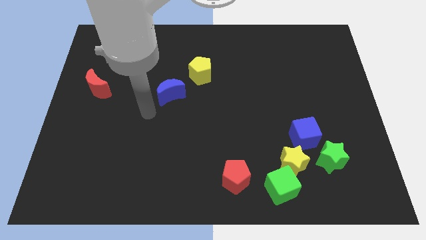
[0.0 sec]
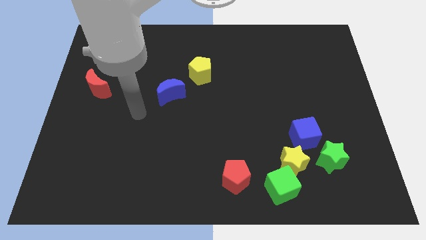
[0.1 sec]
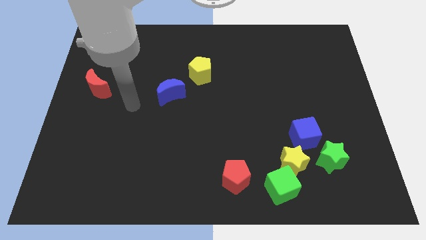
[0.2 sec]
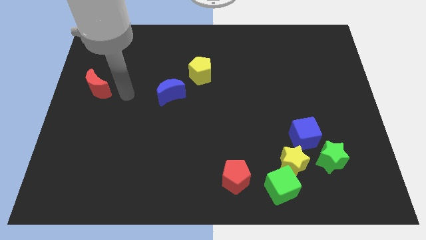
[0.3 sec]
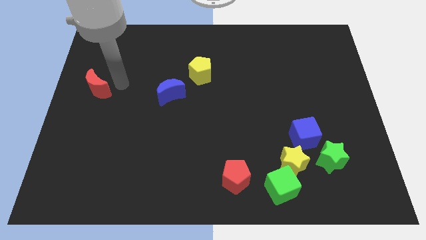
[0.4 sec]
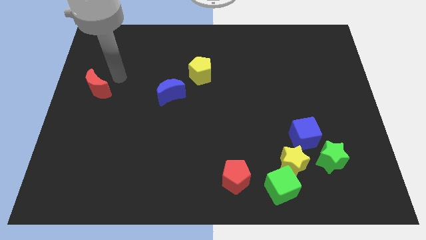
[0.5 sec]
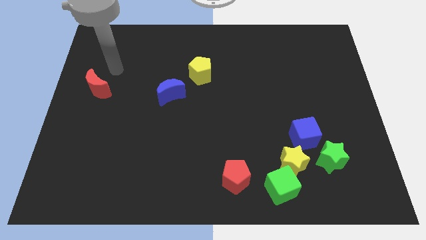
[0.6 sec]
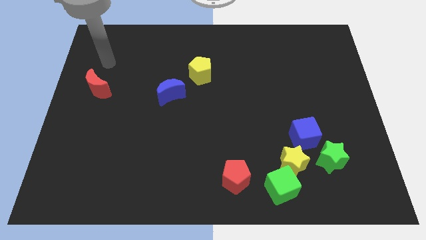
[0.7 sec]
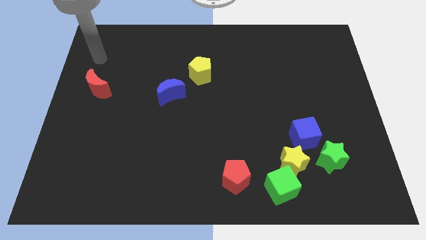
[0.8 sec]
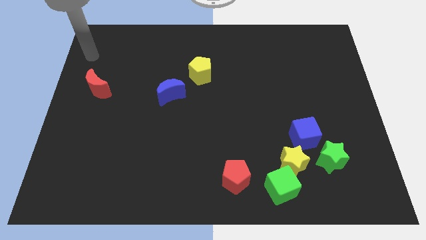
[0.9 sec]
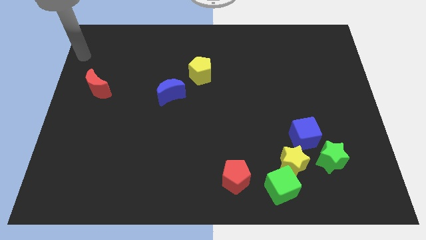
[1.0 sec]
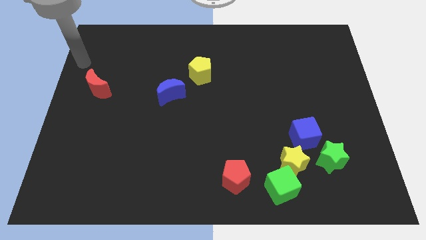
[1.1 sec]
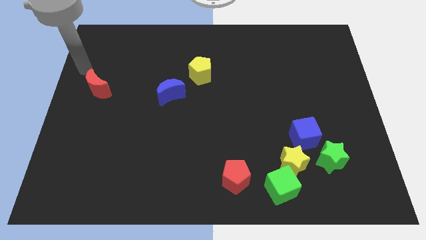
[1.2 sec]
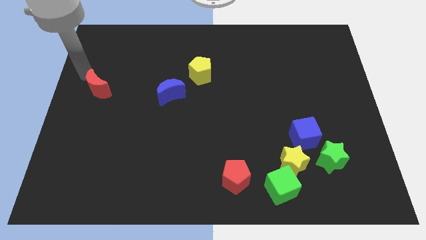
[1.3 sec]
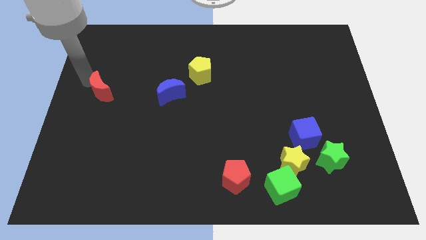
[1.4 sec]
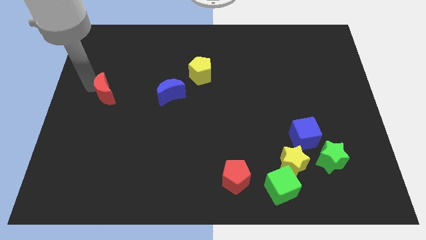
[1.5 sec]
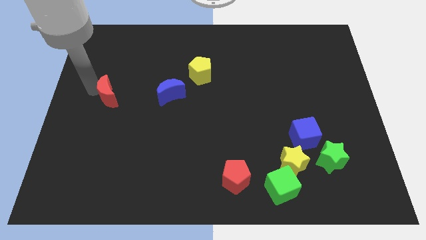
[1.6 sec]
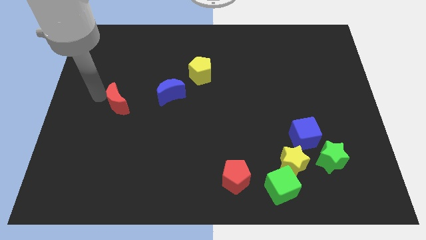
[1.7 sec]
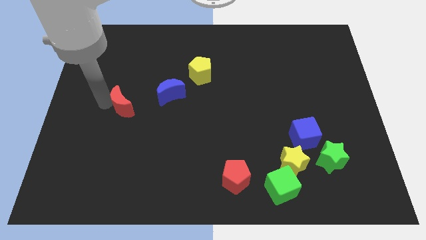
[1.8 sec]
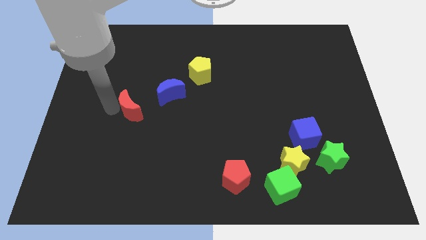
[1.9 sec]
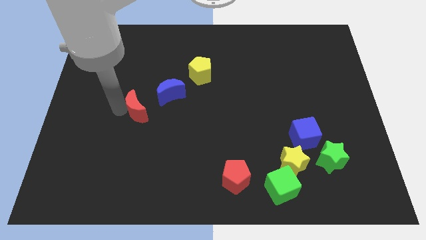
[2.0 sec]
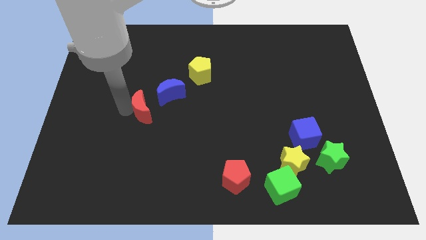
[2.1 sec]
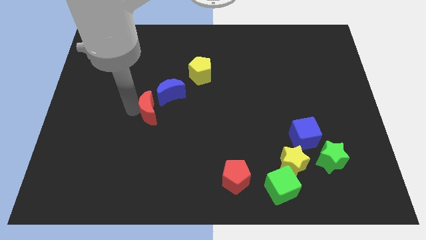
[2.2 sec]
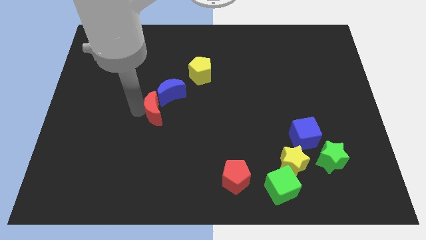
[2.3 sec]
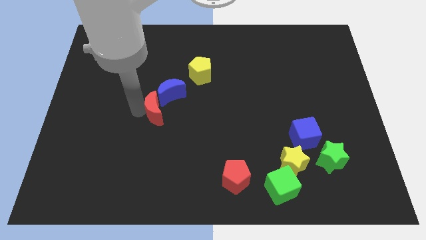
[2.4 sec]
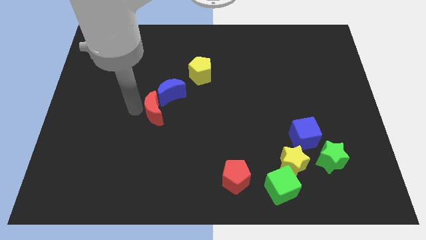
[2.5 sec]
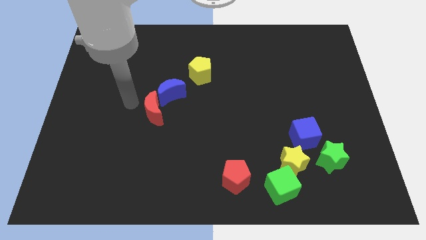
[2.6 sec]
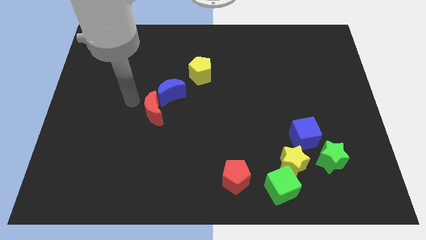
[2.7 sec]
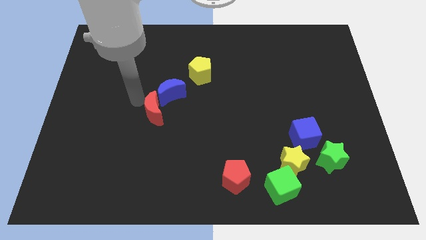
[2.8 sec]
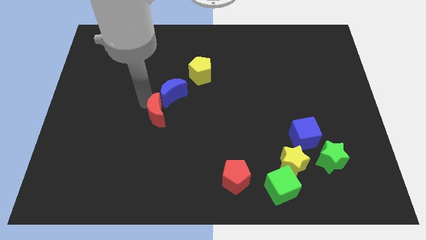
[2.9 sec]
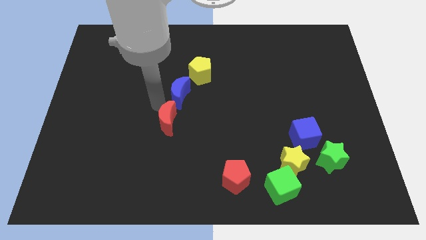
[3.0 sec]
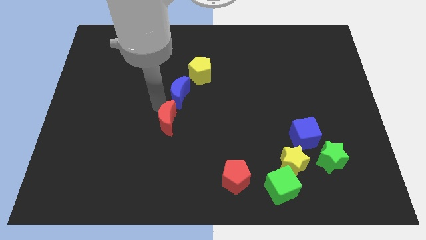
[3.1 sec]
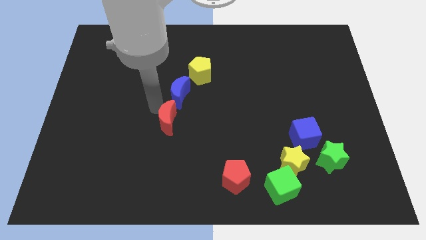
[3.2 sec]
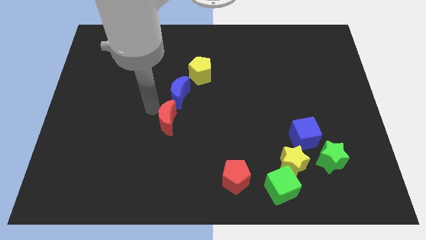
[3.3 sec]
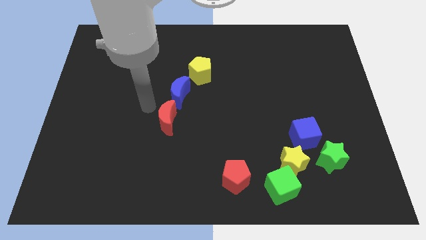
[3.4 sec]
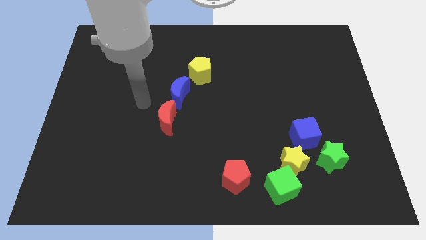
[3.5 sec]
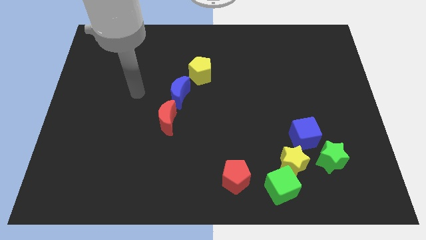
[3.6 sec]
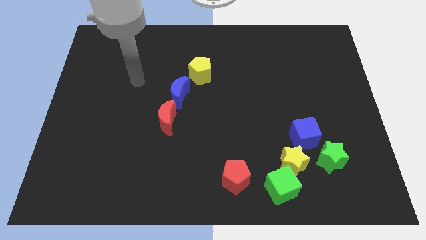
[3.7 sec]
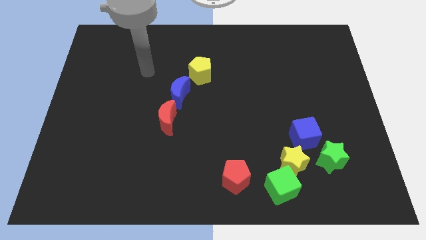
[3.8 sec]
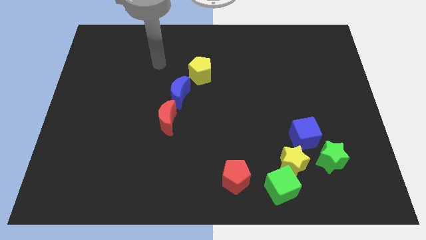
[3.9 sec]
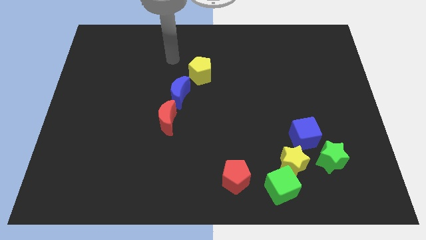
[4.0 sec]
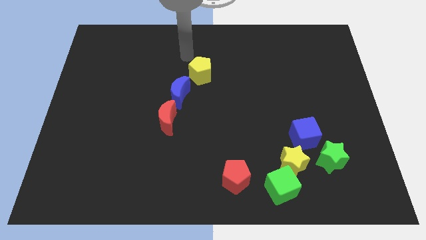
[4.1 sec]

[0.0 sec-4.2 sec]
move the red crescent below the blue crescent

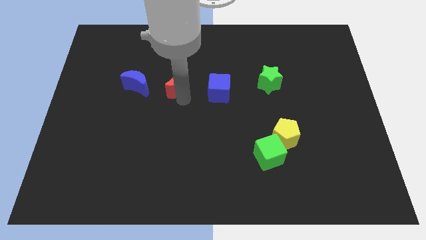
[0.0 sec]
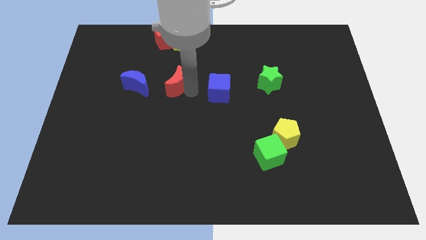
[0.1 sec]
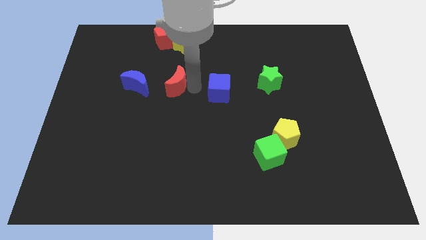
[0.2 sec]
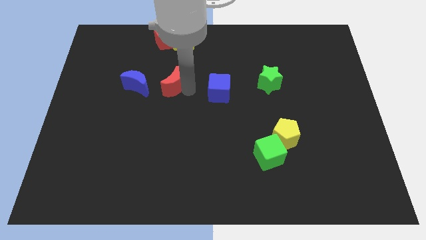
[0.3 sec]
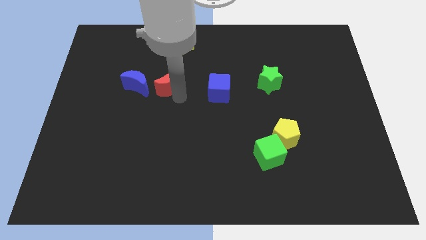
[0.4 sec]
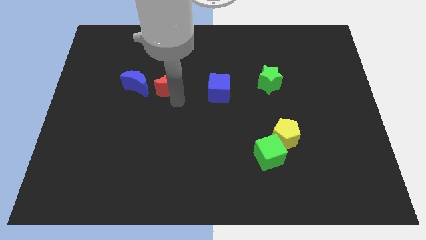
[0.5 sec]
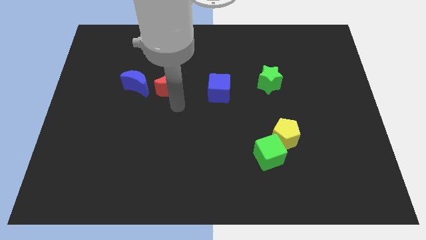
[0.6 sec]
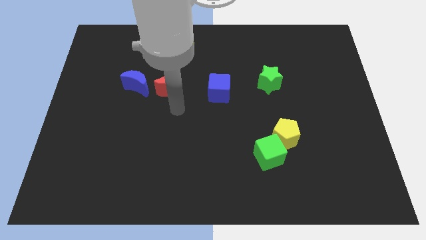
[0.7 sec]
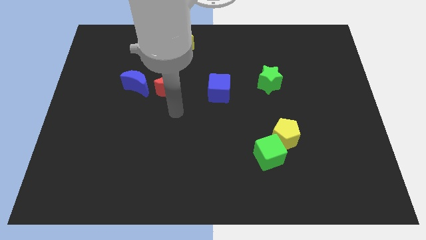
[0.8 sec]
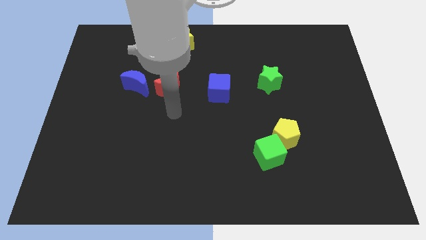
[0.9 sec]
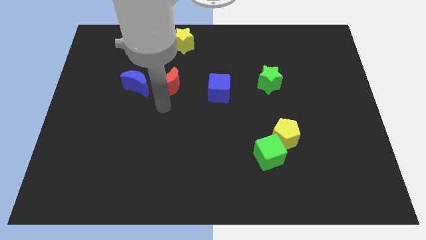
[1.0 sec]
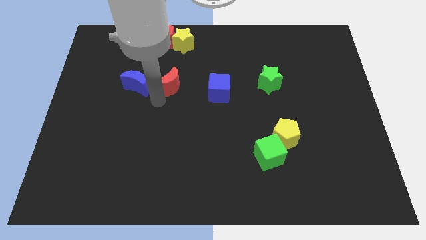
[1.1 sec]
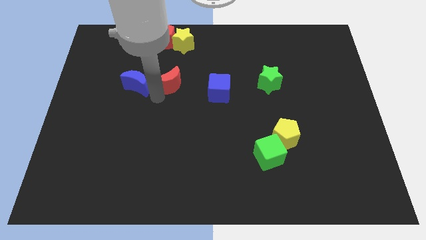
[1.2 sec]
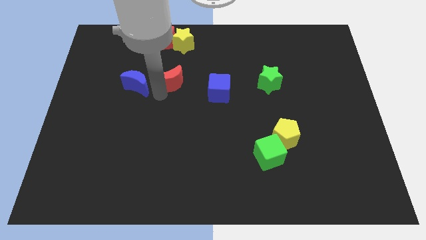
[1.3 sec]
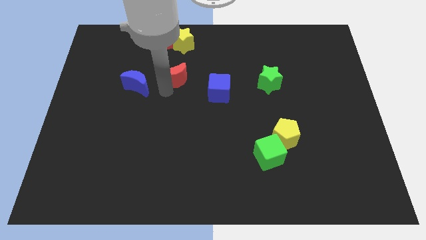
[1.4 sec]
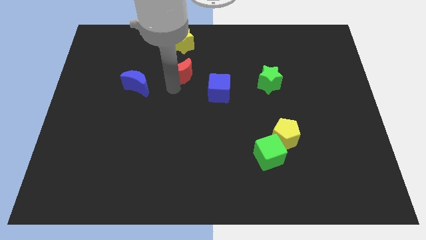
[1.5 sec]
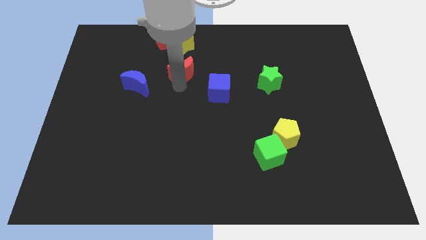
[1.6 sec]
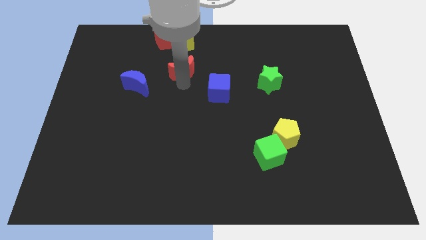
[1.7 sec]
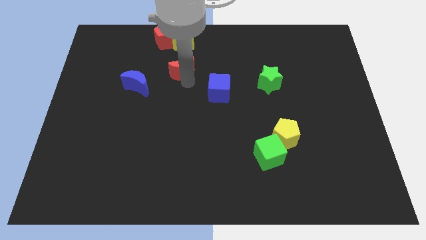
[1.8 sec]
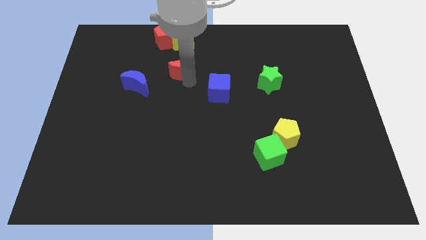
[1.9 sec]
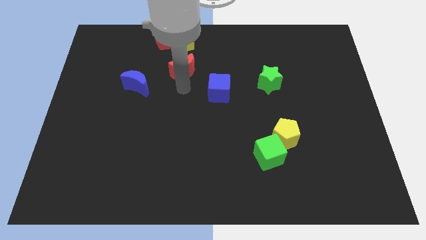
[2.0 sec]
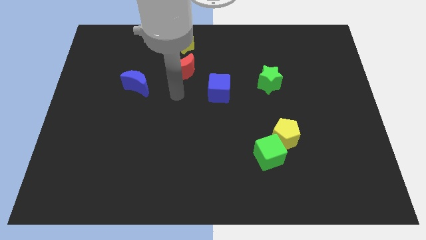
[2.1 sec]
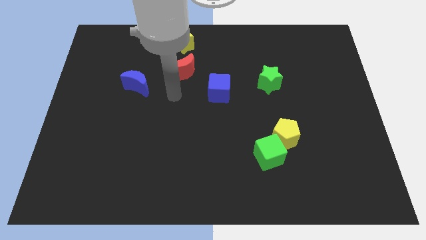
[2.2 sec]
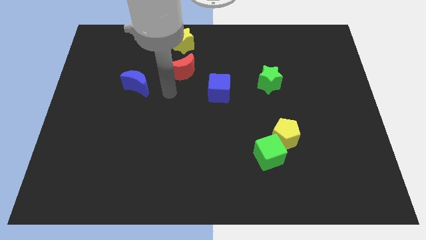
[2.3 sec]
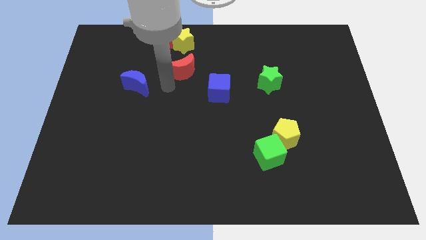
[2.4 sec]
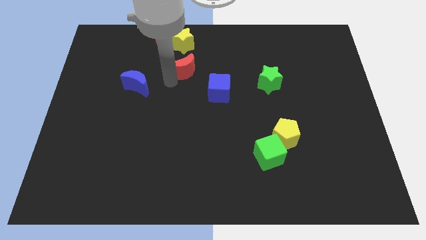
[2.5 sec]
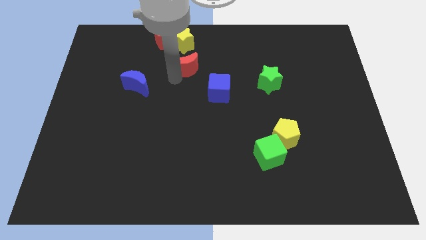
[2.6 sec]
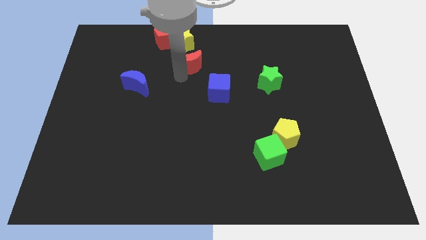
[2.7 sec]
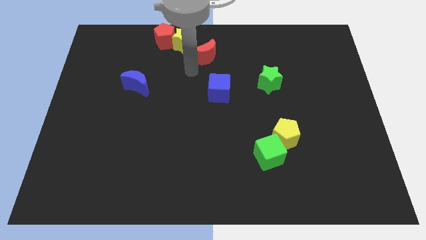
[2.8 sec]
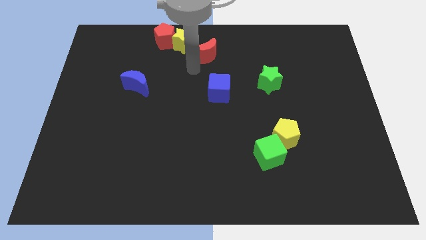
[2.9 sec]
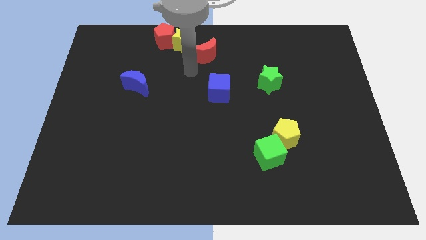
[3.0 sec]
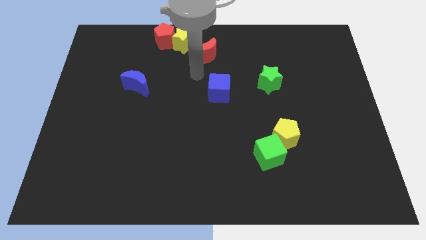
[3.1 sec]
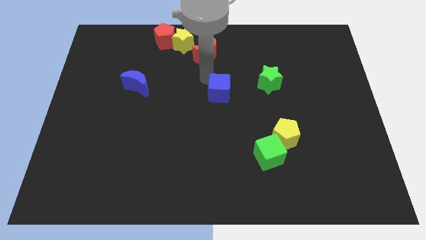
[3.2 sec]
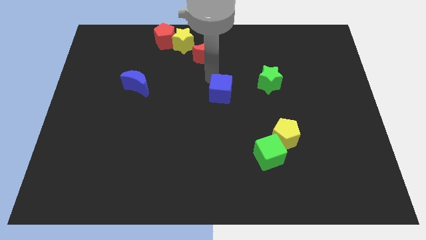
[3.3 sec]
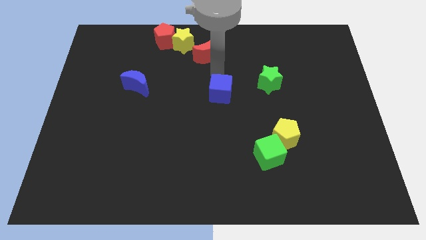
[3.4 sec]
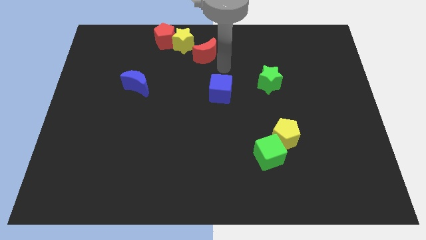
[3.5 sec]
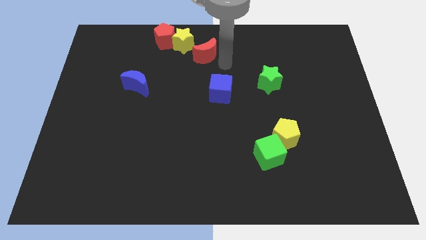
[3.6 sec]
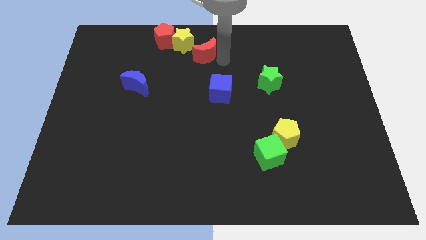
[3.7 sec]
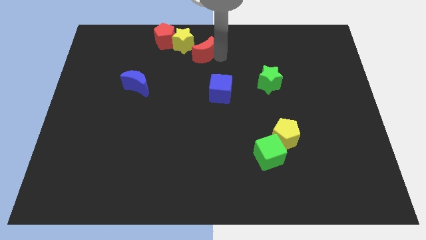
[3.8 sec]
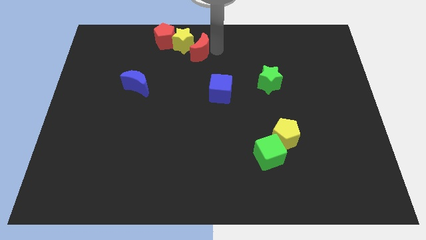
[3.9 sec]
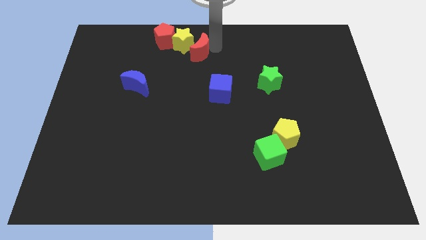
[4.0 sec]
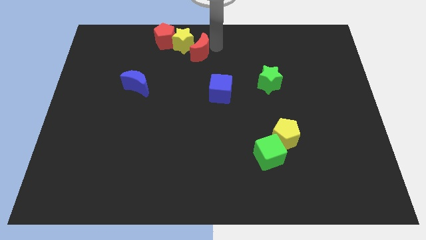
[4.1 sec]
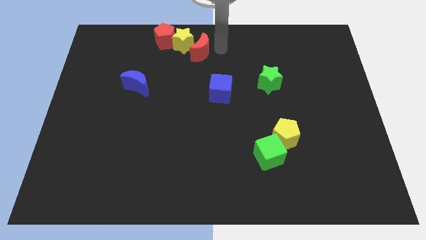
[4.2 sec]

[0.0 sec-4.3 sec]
move the red crescent to the bottom of the yellow star

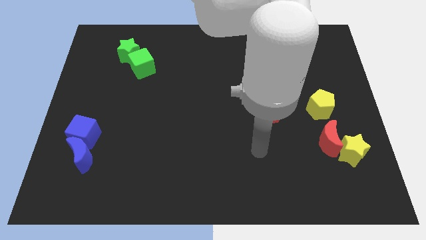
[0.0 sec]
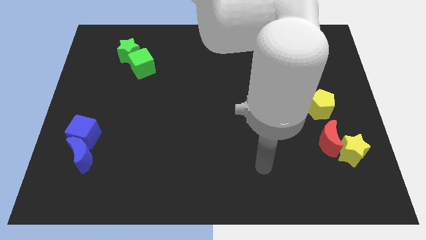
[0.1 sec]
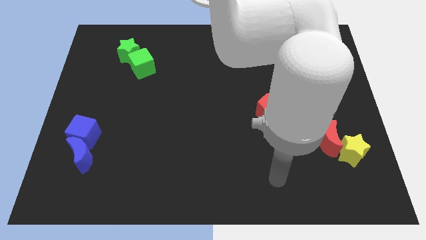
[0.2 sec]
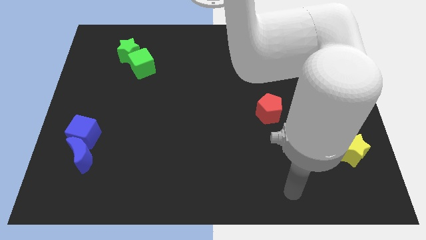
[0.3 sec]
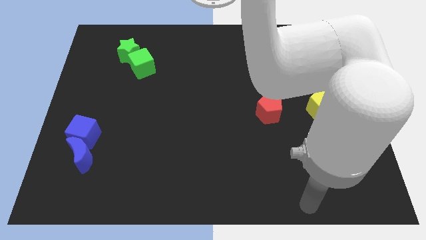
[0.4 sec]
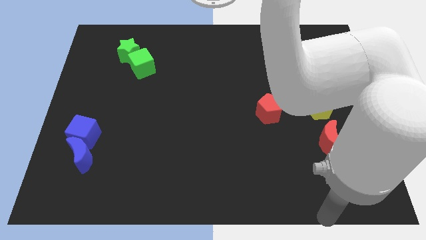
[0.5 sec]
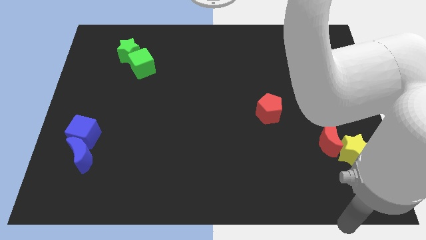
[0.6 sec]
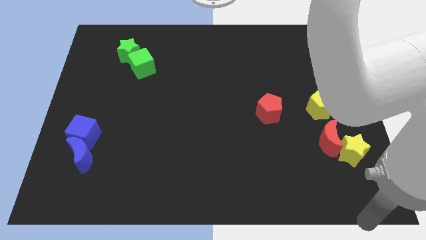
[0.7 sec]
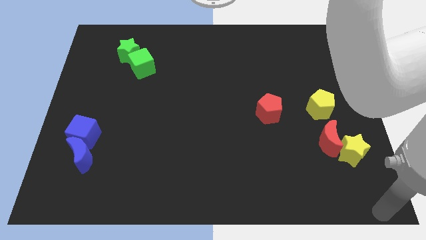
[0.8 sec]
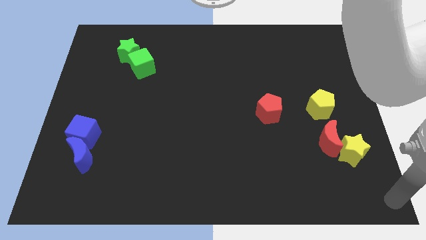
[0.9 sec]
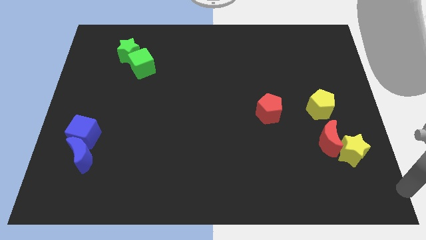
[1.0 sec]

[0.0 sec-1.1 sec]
move the arm to the bottom right corner
